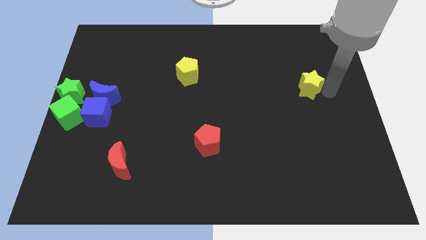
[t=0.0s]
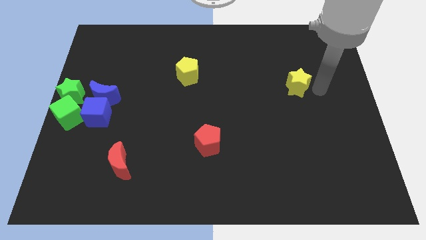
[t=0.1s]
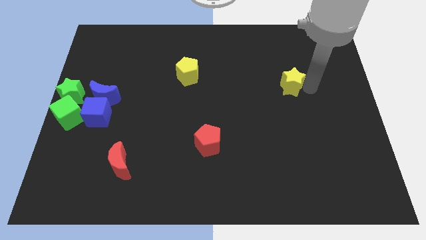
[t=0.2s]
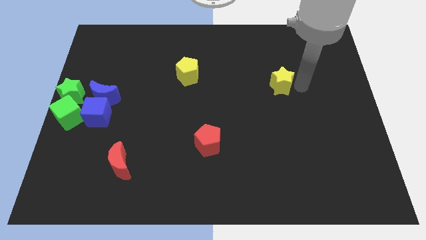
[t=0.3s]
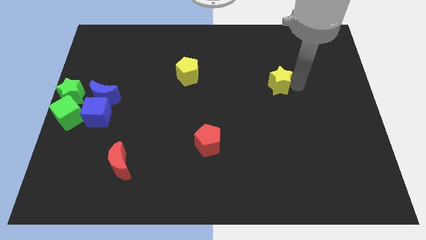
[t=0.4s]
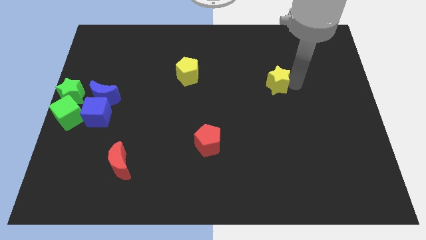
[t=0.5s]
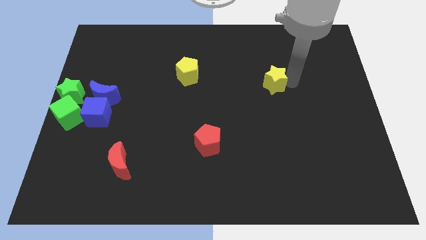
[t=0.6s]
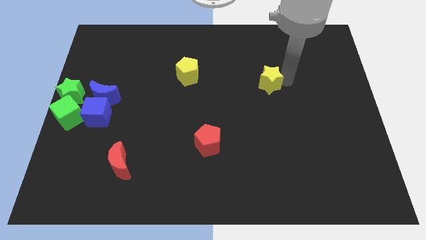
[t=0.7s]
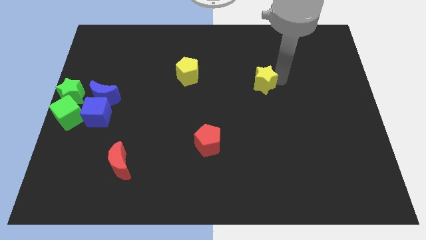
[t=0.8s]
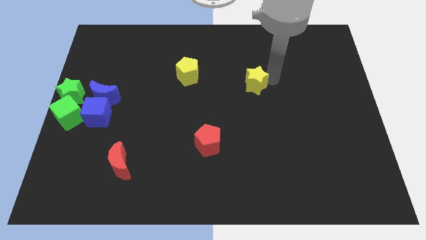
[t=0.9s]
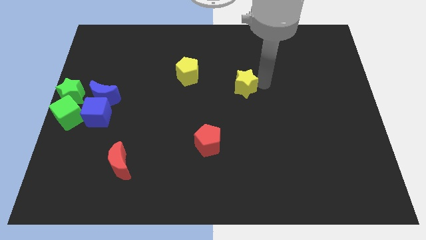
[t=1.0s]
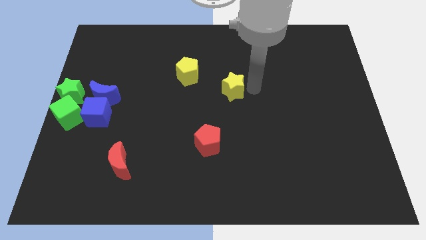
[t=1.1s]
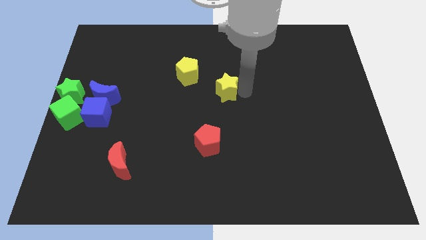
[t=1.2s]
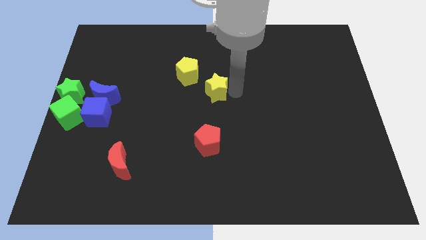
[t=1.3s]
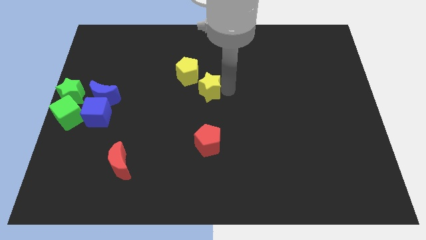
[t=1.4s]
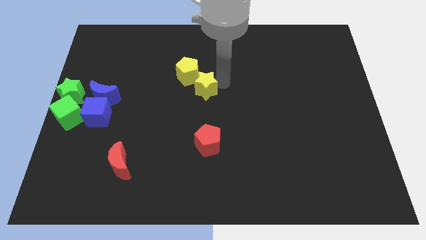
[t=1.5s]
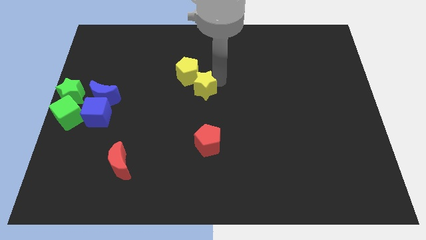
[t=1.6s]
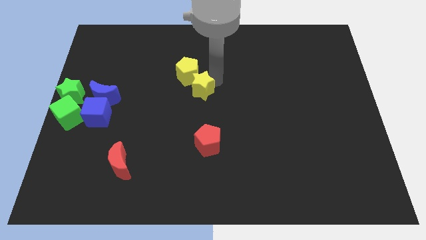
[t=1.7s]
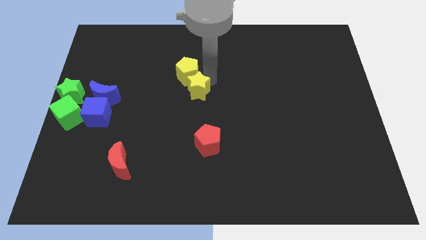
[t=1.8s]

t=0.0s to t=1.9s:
move yellow star towards the yellow pentagon

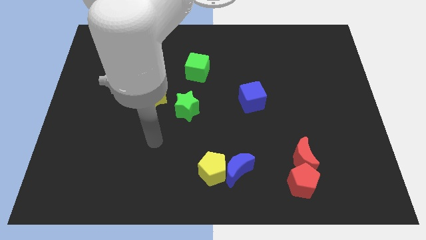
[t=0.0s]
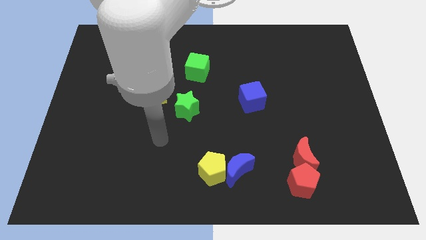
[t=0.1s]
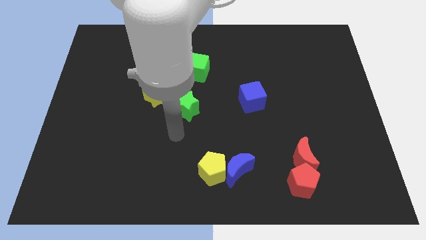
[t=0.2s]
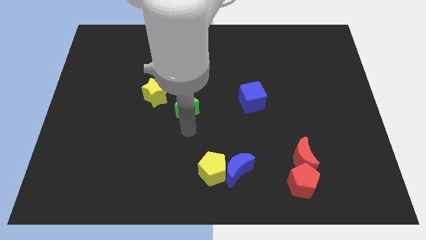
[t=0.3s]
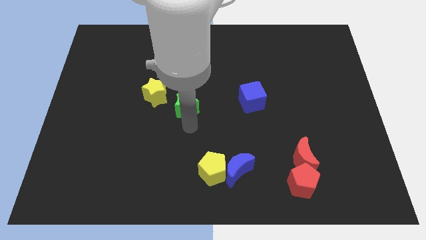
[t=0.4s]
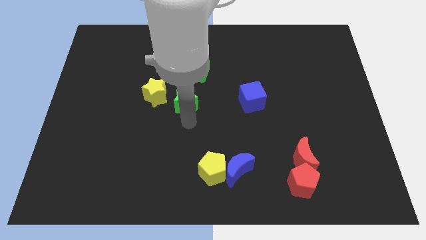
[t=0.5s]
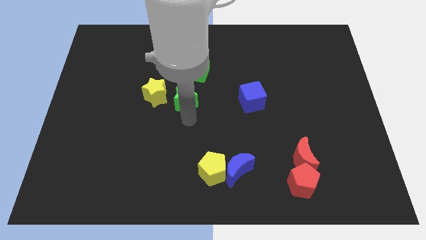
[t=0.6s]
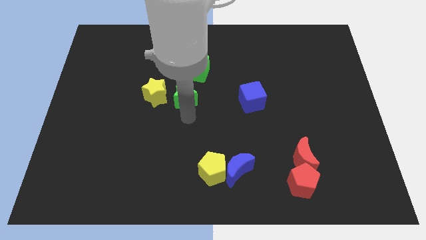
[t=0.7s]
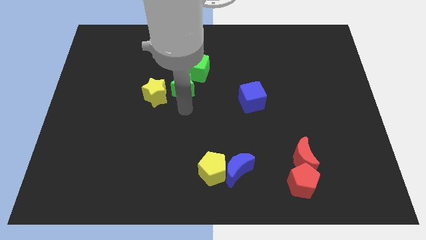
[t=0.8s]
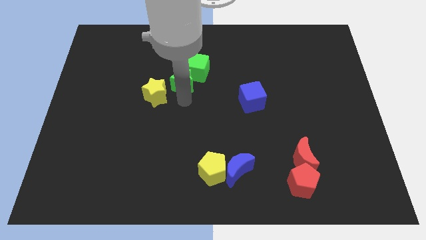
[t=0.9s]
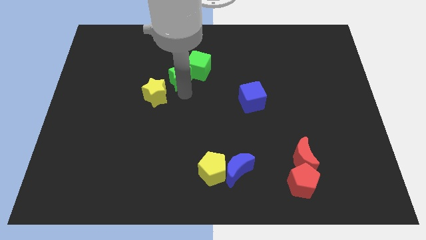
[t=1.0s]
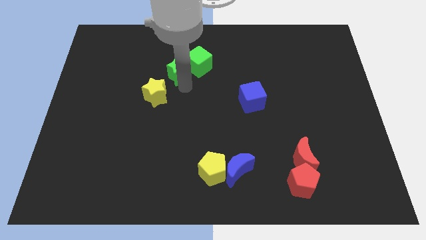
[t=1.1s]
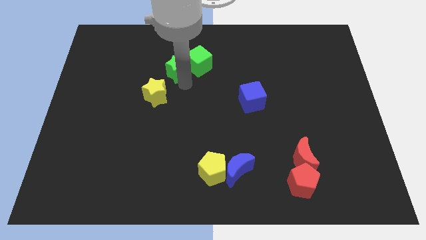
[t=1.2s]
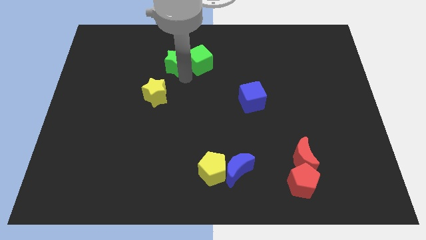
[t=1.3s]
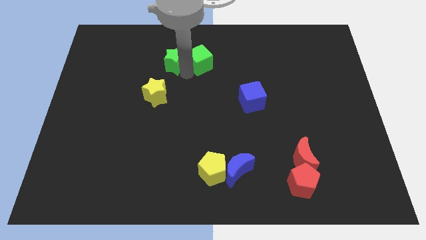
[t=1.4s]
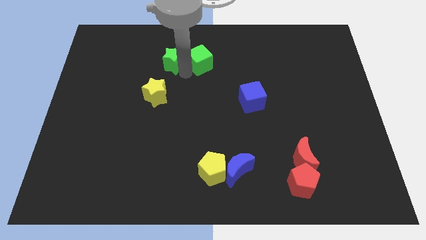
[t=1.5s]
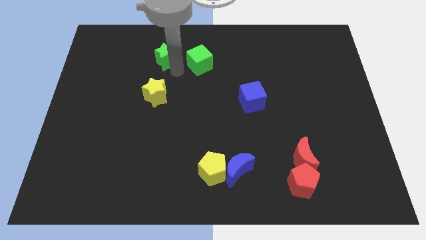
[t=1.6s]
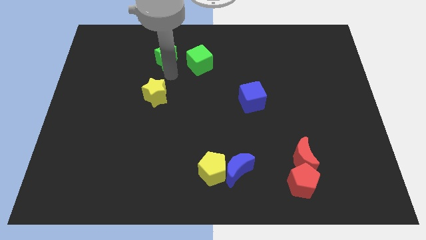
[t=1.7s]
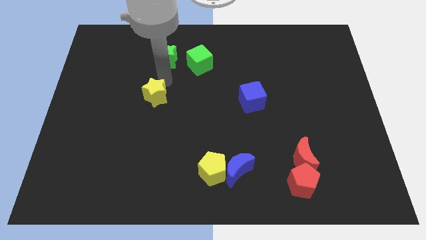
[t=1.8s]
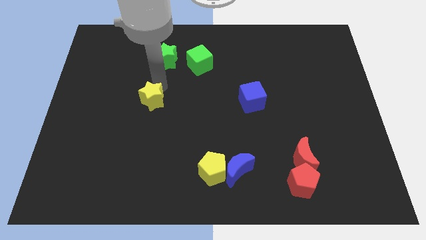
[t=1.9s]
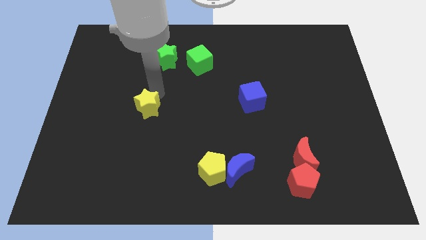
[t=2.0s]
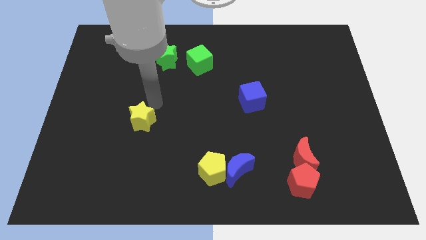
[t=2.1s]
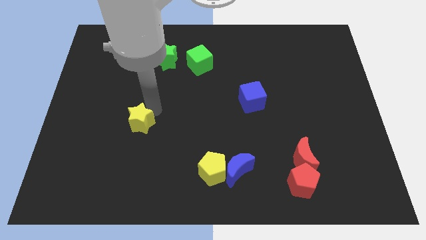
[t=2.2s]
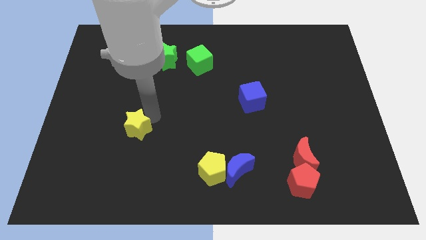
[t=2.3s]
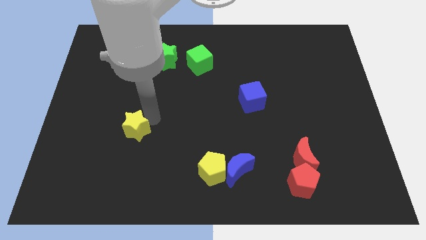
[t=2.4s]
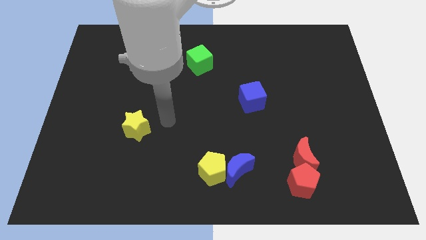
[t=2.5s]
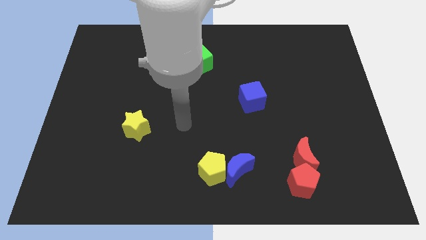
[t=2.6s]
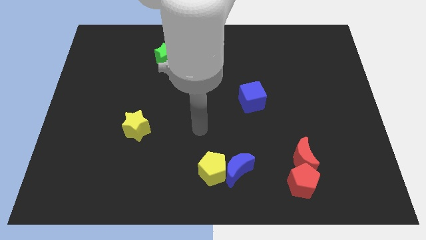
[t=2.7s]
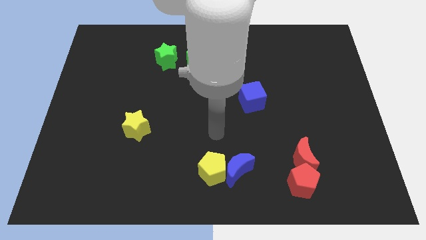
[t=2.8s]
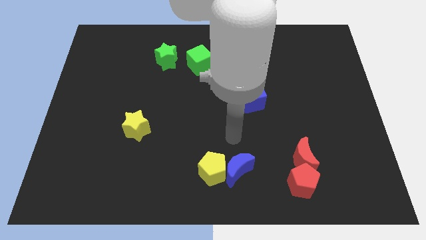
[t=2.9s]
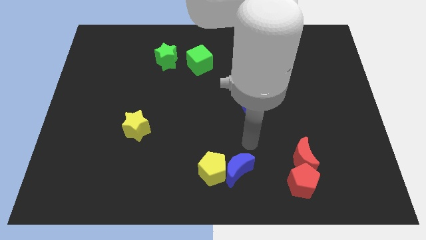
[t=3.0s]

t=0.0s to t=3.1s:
push the green star to the top

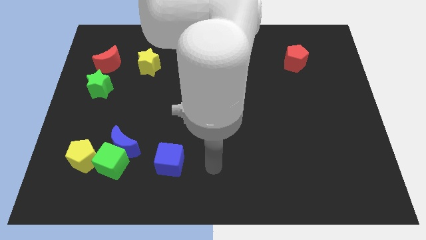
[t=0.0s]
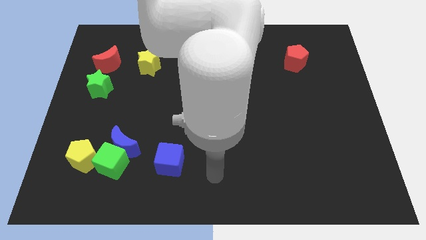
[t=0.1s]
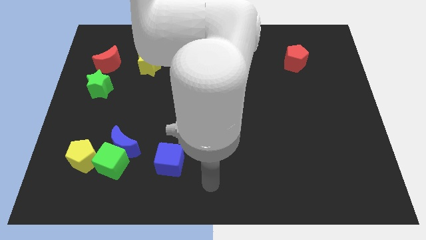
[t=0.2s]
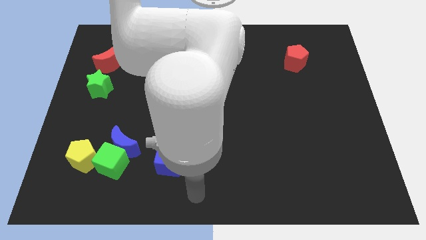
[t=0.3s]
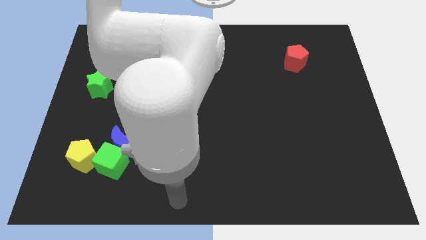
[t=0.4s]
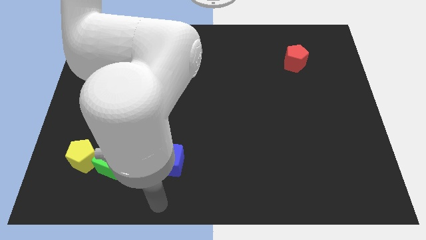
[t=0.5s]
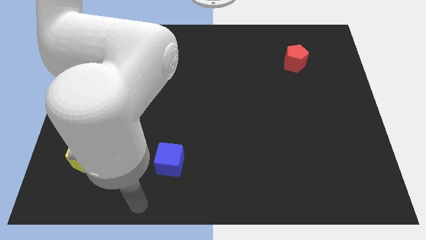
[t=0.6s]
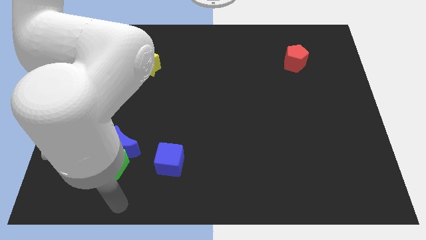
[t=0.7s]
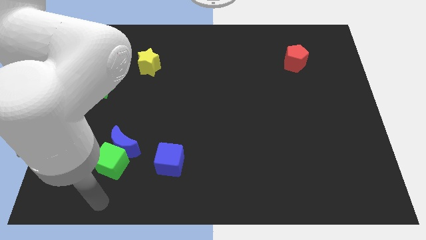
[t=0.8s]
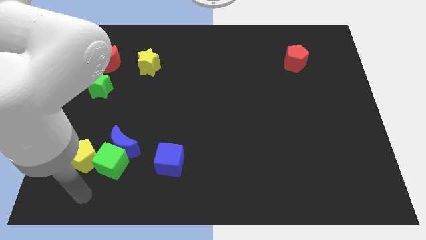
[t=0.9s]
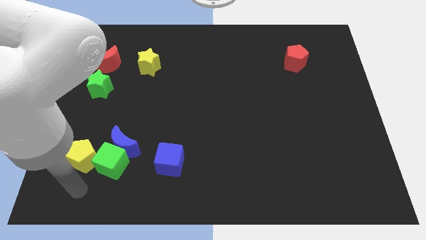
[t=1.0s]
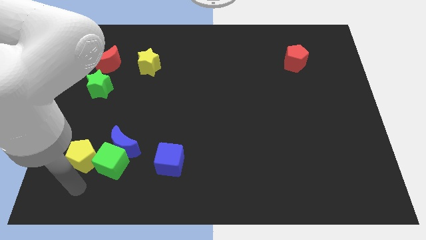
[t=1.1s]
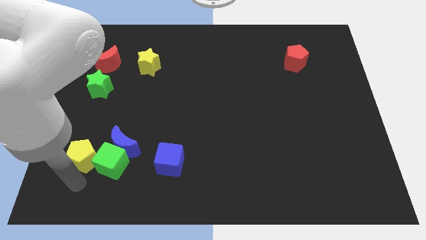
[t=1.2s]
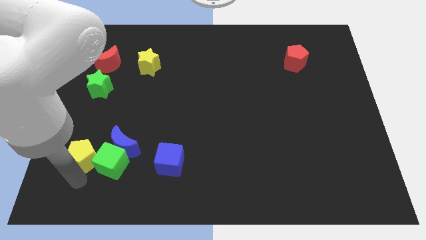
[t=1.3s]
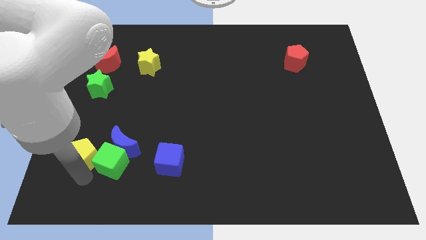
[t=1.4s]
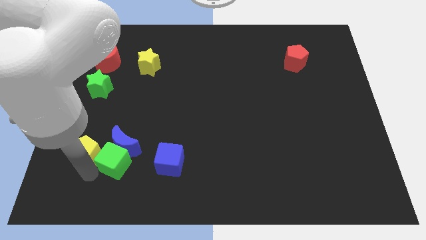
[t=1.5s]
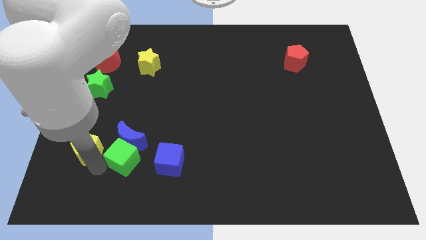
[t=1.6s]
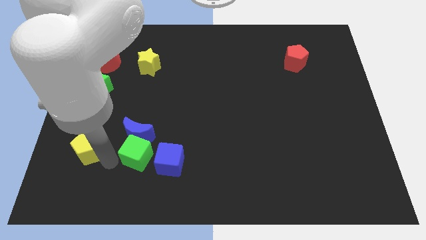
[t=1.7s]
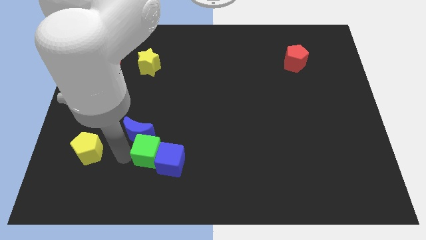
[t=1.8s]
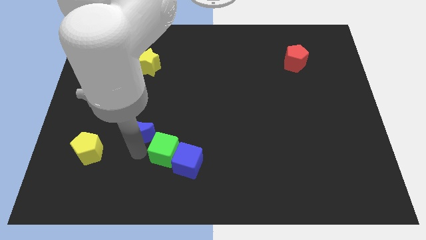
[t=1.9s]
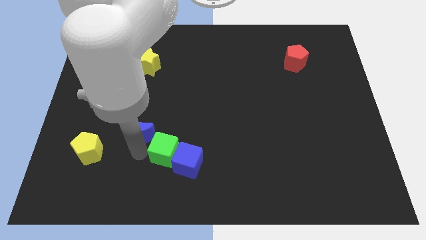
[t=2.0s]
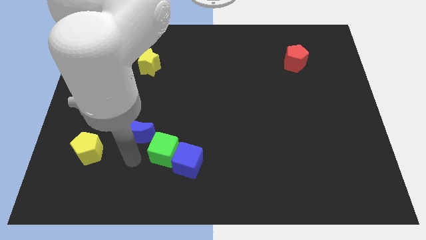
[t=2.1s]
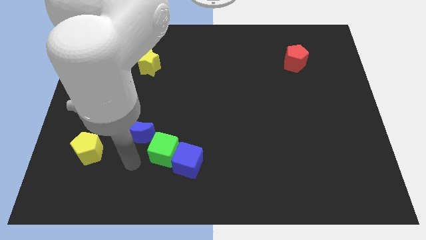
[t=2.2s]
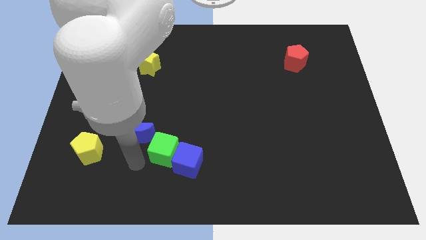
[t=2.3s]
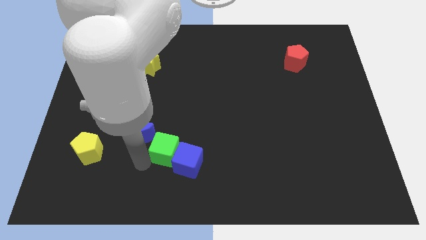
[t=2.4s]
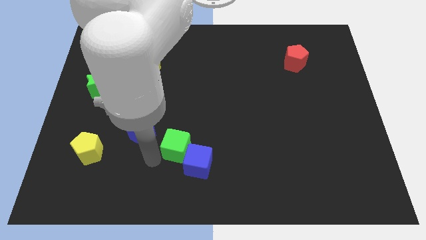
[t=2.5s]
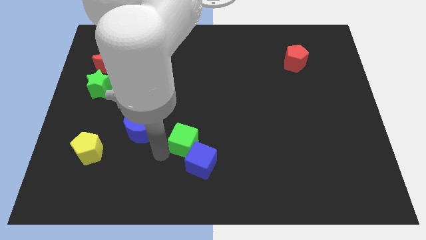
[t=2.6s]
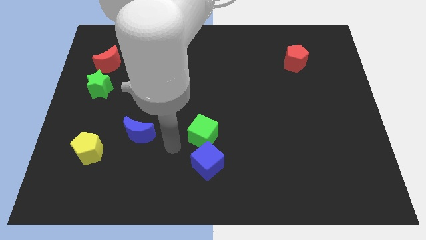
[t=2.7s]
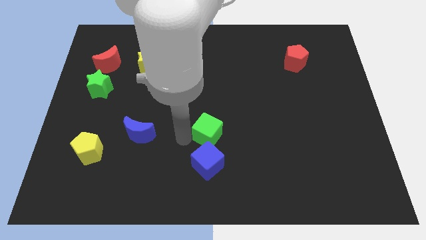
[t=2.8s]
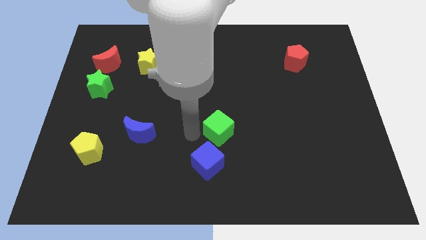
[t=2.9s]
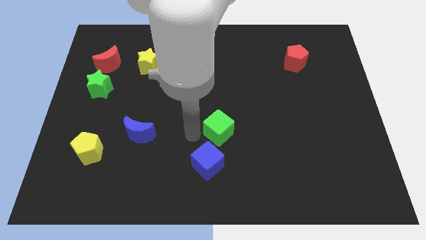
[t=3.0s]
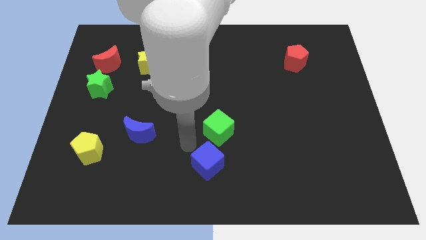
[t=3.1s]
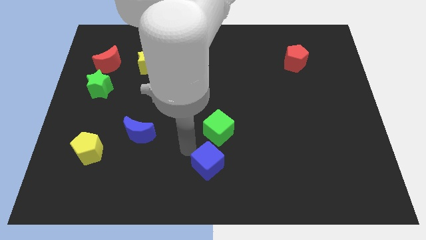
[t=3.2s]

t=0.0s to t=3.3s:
move the green cube to the top right side of the blue cube

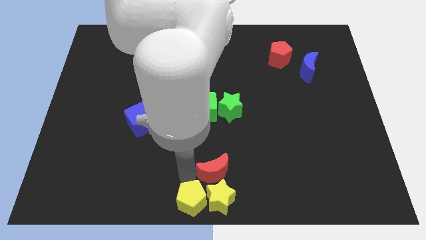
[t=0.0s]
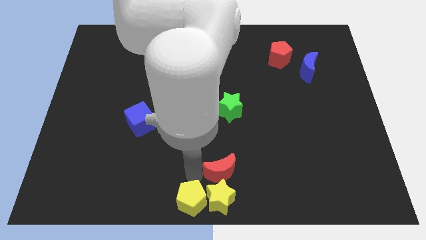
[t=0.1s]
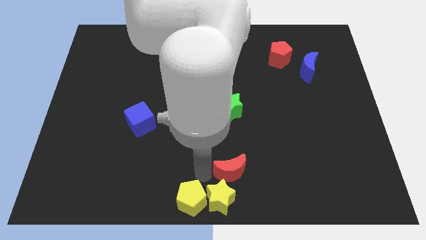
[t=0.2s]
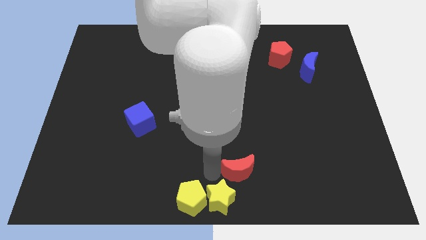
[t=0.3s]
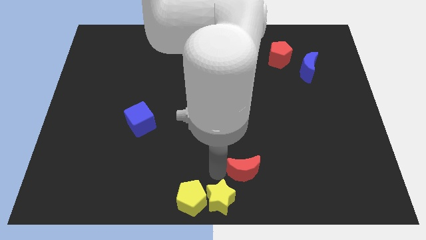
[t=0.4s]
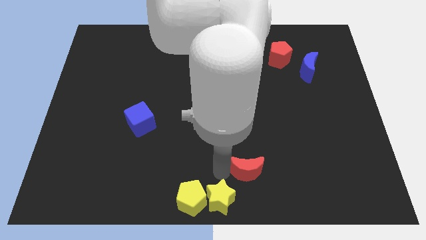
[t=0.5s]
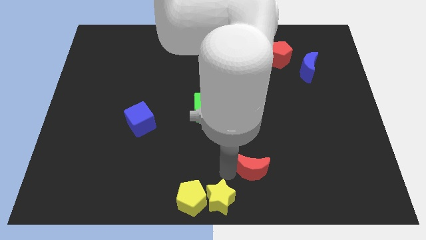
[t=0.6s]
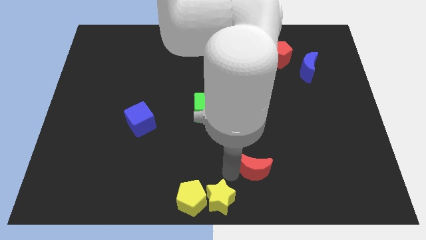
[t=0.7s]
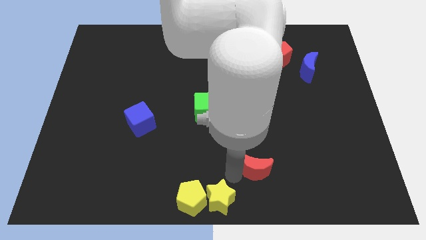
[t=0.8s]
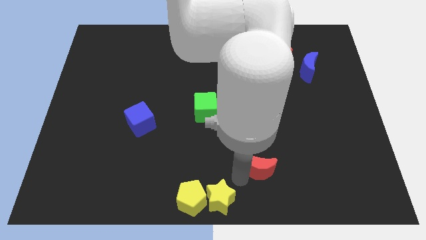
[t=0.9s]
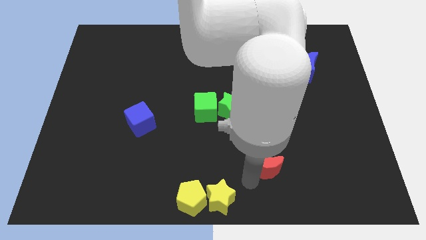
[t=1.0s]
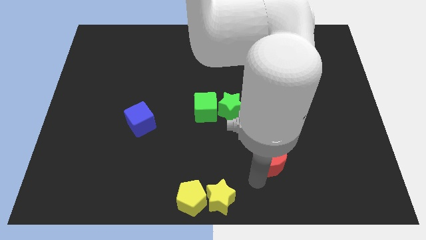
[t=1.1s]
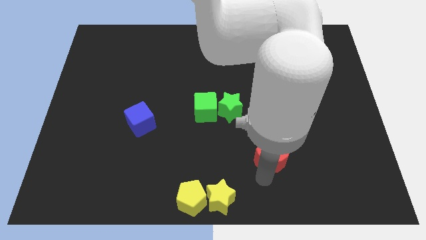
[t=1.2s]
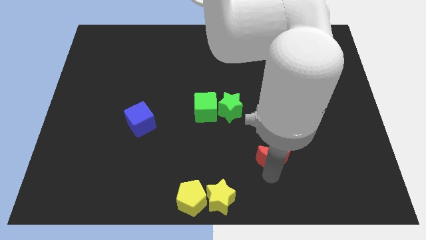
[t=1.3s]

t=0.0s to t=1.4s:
push the red crescent to the right
